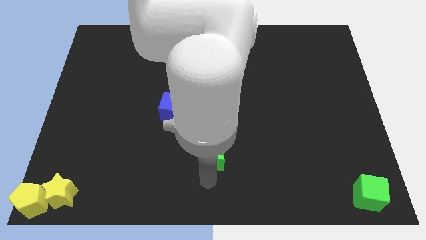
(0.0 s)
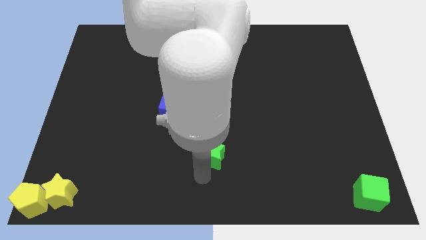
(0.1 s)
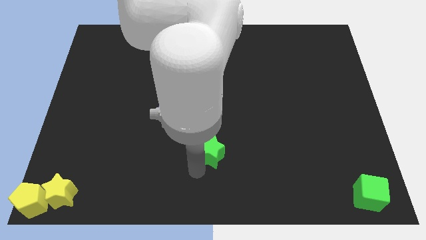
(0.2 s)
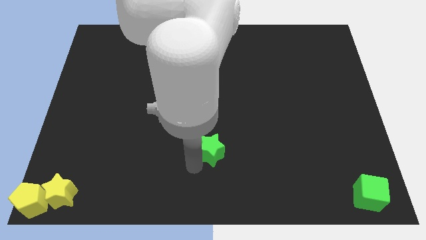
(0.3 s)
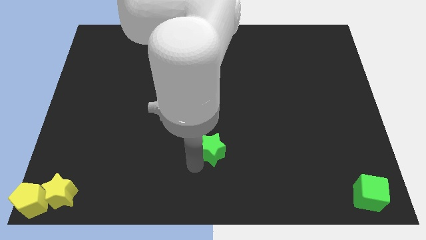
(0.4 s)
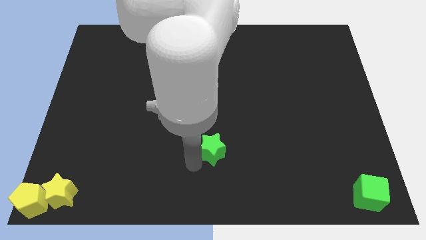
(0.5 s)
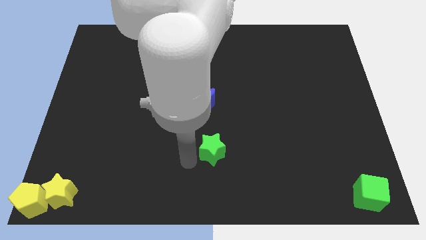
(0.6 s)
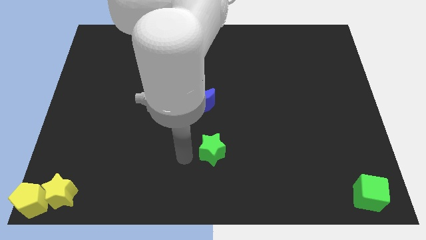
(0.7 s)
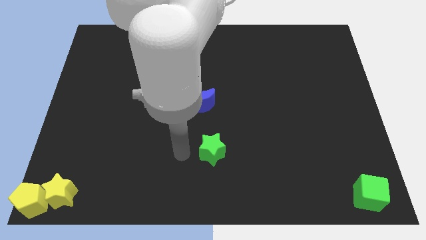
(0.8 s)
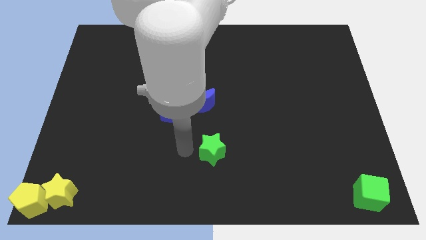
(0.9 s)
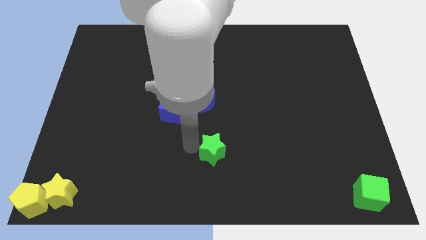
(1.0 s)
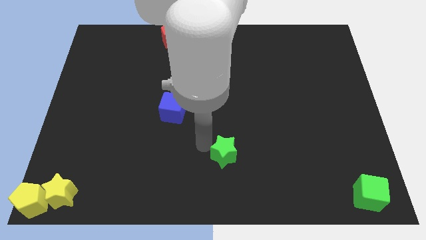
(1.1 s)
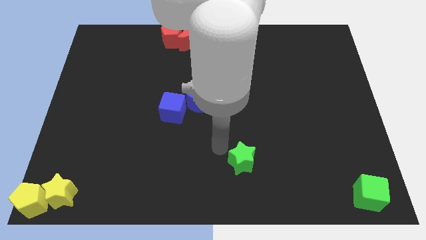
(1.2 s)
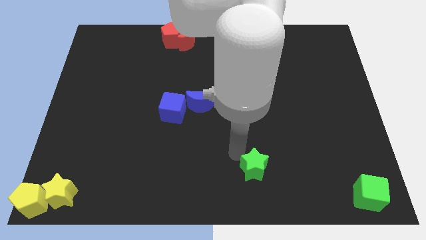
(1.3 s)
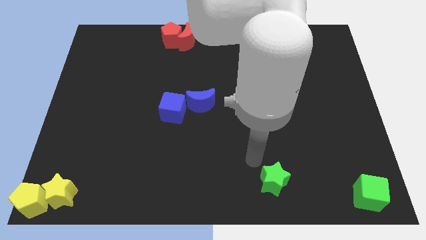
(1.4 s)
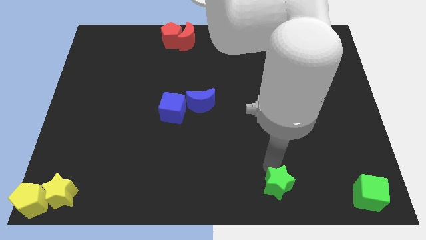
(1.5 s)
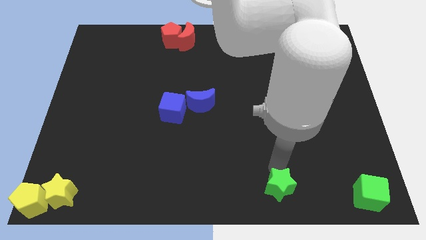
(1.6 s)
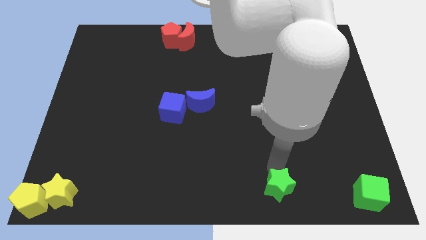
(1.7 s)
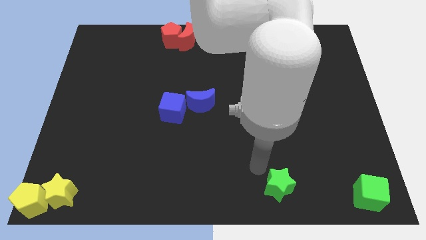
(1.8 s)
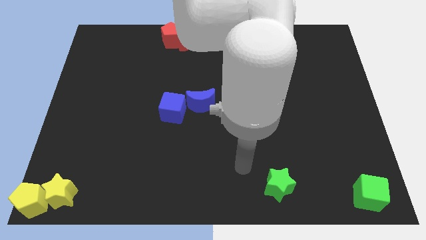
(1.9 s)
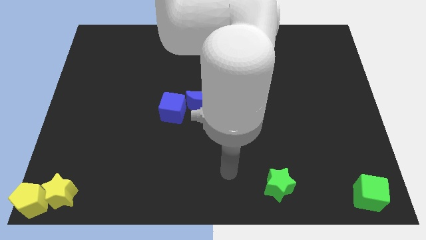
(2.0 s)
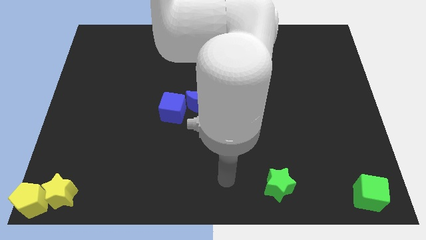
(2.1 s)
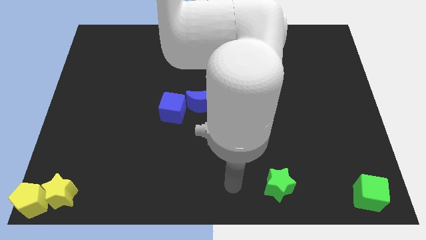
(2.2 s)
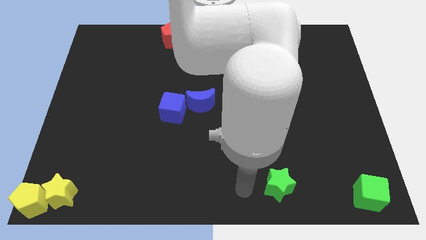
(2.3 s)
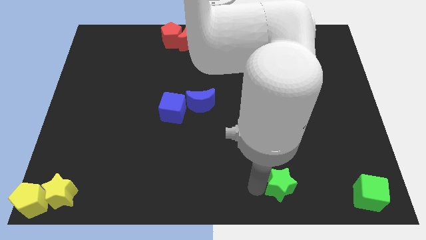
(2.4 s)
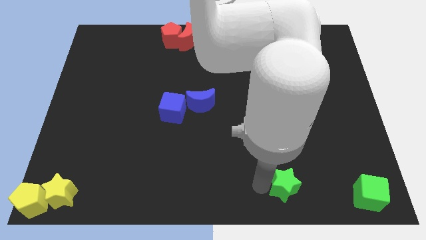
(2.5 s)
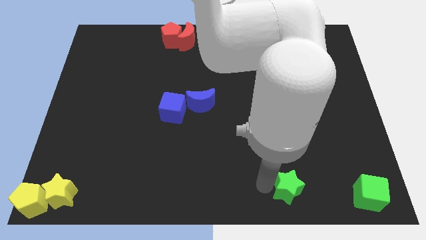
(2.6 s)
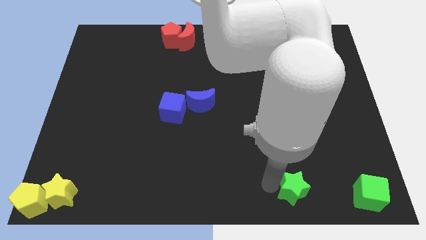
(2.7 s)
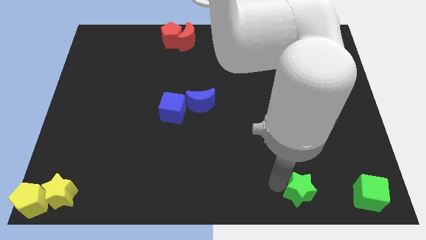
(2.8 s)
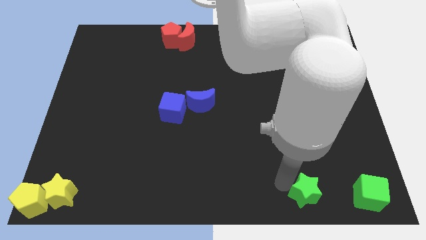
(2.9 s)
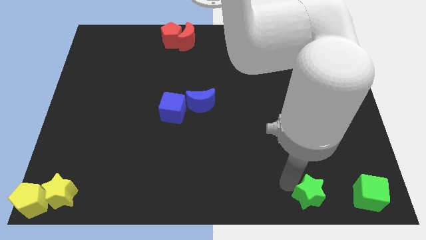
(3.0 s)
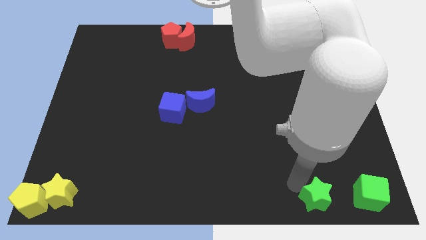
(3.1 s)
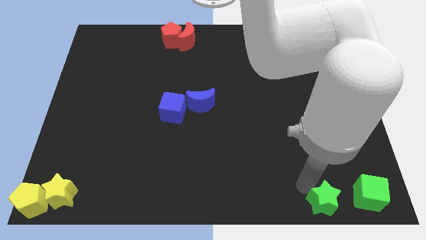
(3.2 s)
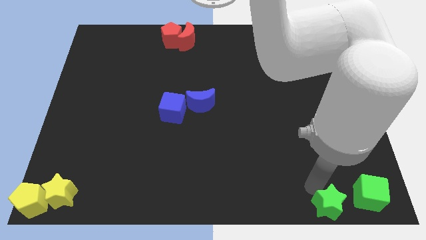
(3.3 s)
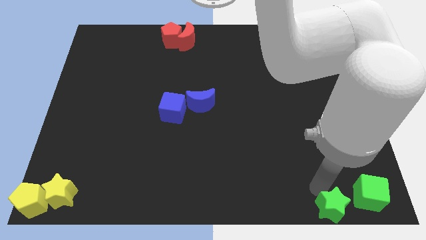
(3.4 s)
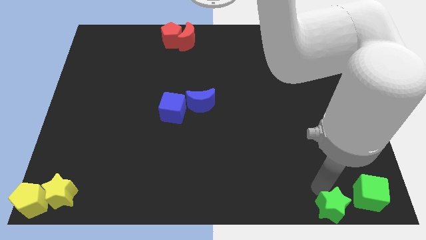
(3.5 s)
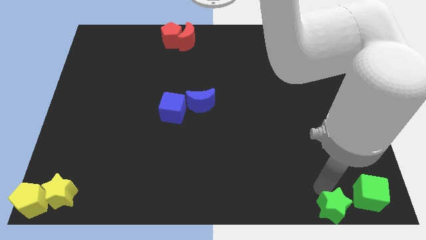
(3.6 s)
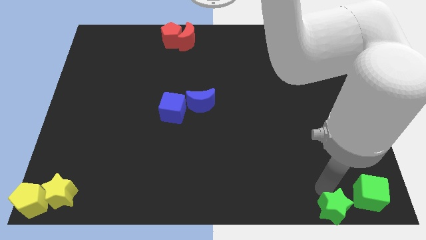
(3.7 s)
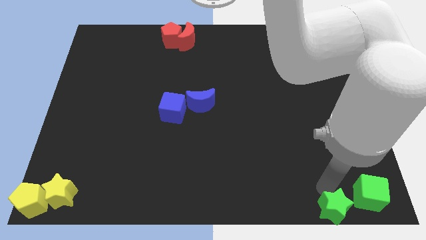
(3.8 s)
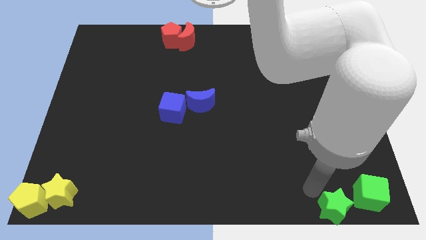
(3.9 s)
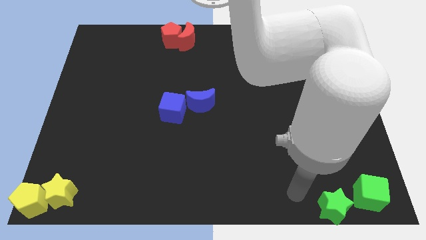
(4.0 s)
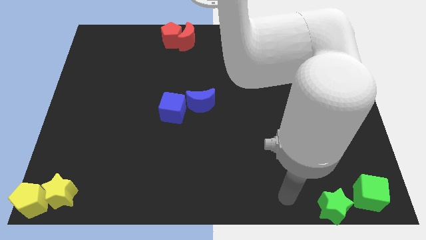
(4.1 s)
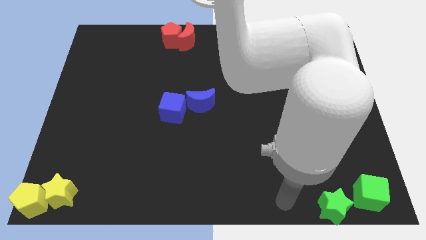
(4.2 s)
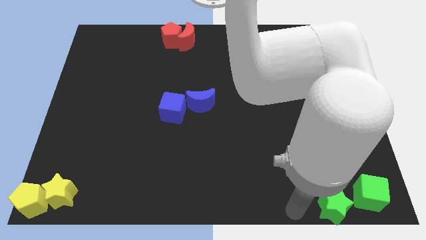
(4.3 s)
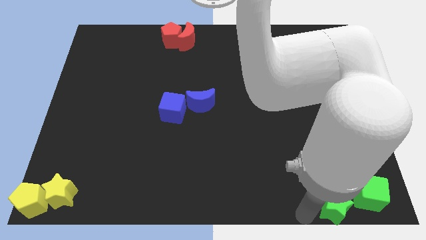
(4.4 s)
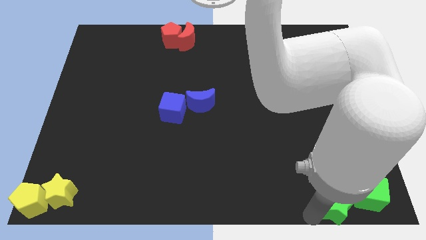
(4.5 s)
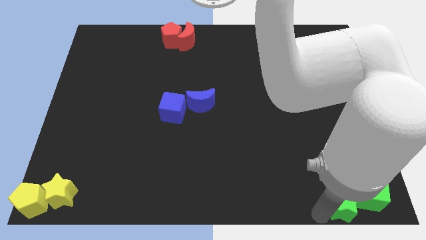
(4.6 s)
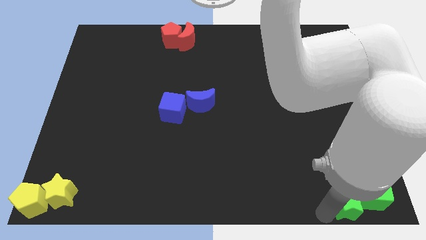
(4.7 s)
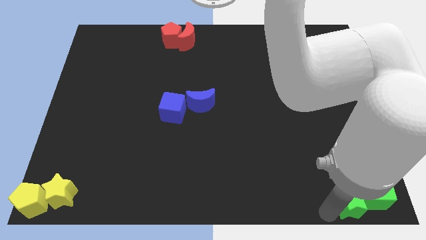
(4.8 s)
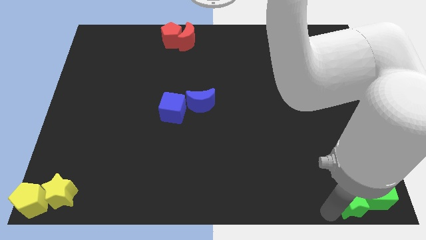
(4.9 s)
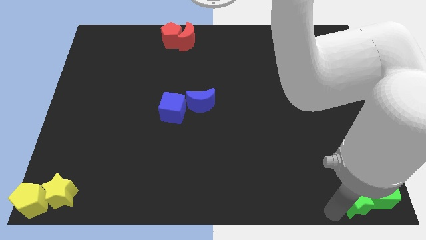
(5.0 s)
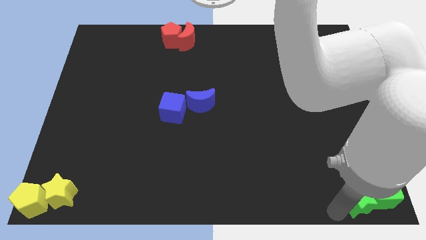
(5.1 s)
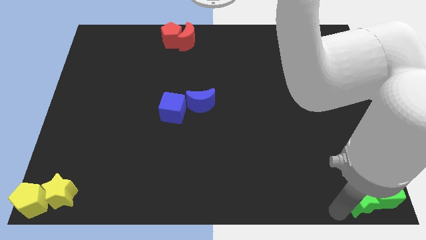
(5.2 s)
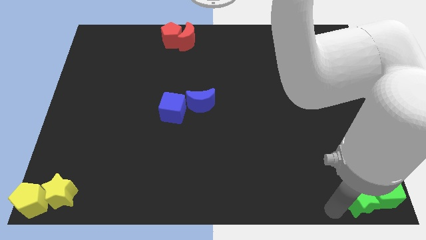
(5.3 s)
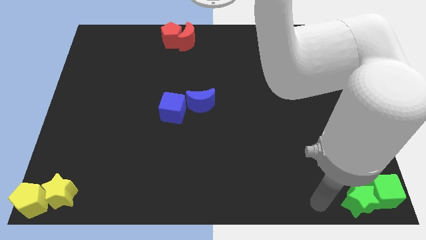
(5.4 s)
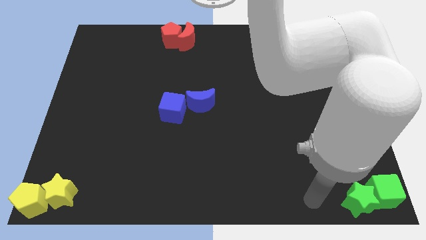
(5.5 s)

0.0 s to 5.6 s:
push the green star to the left of the green cube

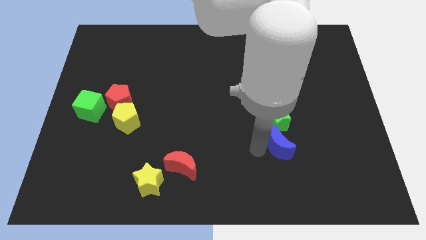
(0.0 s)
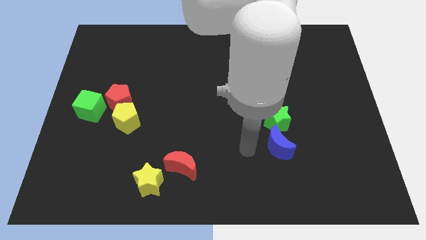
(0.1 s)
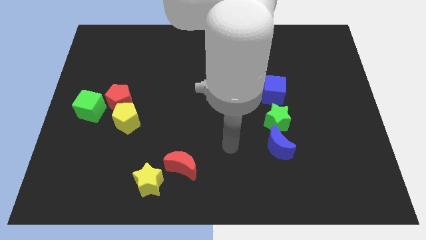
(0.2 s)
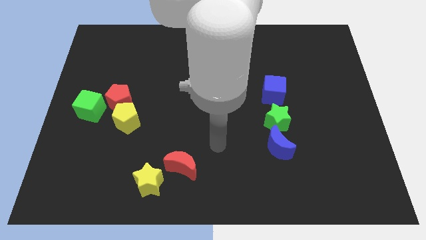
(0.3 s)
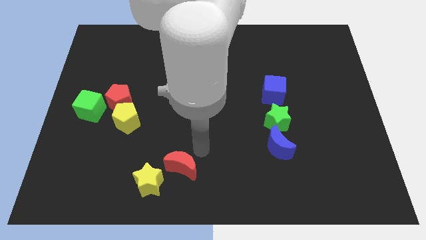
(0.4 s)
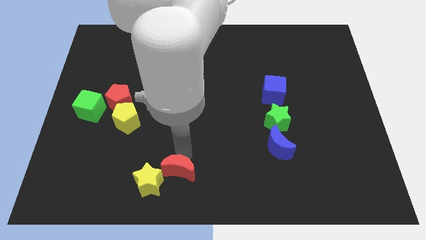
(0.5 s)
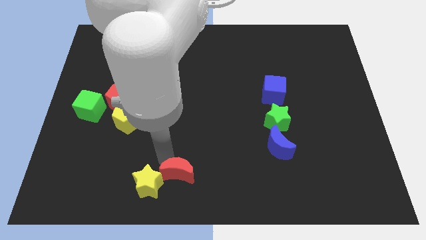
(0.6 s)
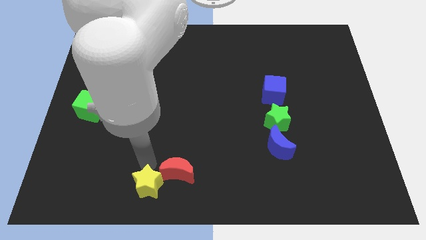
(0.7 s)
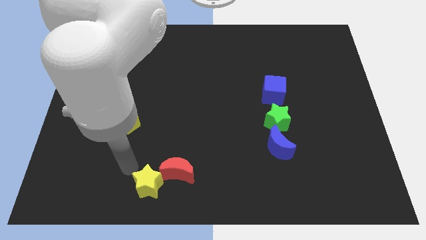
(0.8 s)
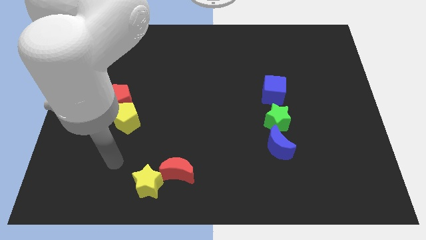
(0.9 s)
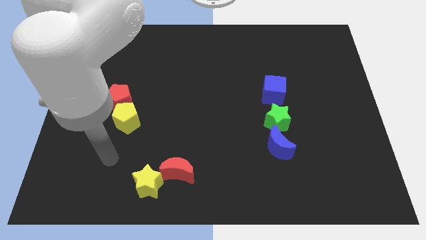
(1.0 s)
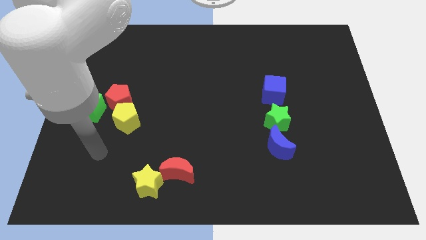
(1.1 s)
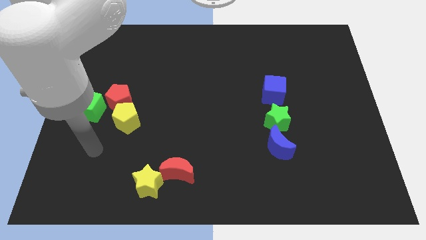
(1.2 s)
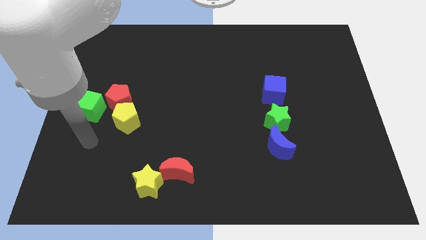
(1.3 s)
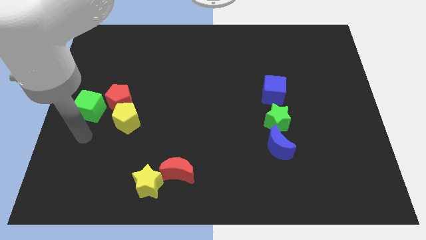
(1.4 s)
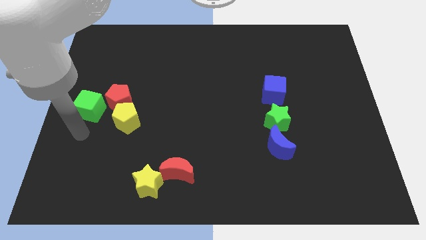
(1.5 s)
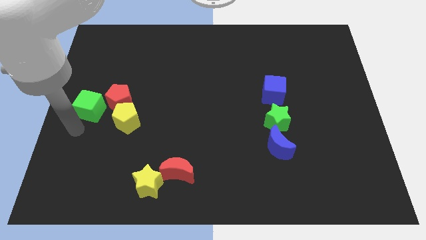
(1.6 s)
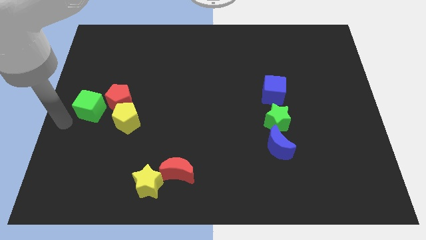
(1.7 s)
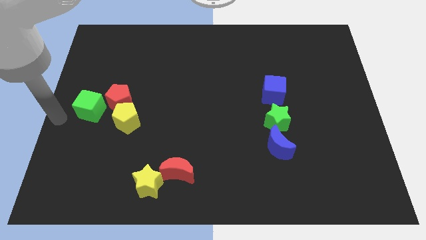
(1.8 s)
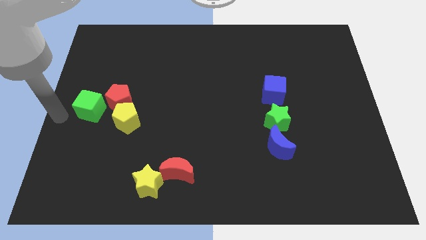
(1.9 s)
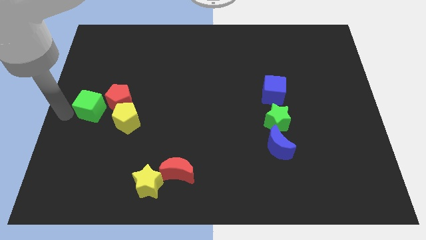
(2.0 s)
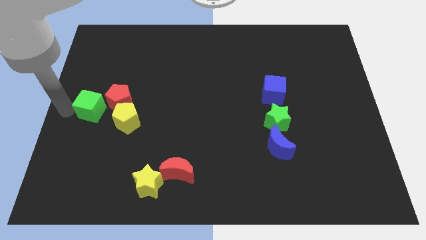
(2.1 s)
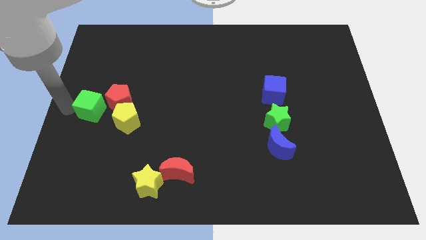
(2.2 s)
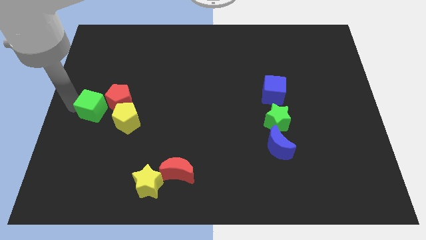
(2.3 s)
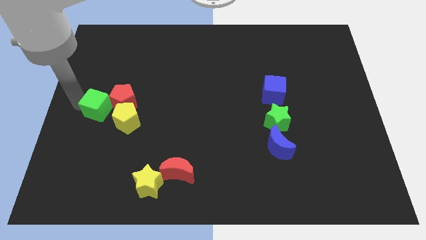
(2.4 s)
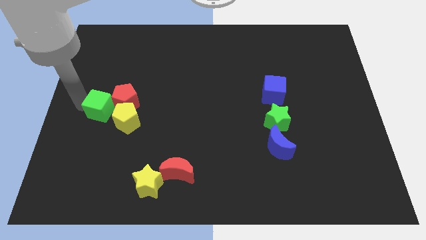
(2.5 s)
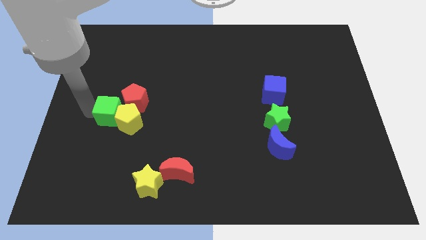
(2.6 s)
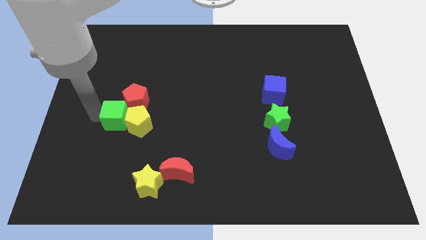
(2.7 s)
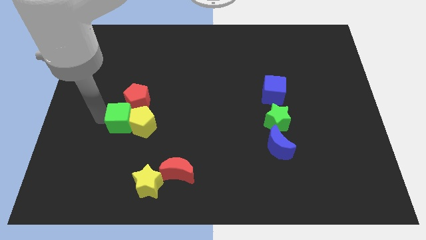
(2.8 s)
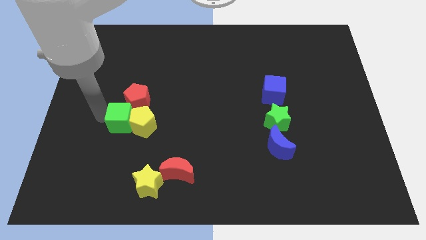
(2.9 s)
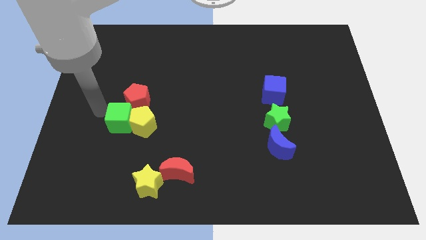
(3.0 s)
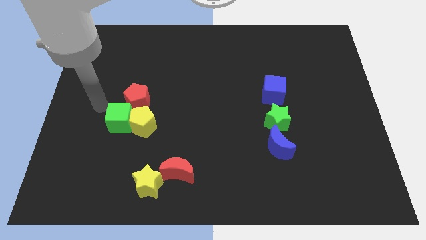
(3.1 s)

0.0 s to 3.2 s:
push the group of blocks towards bottom center

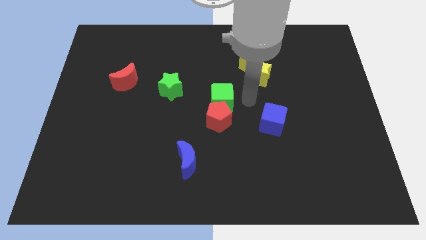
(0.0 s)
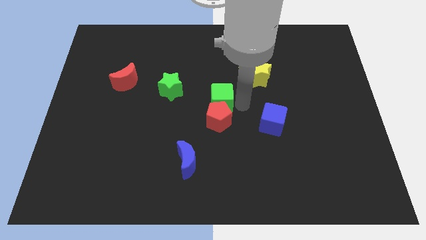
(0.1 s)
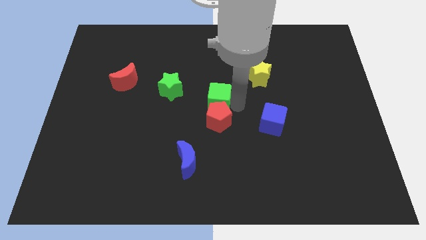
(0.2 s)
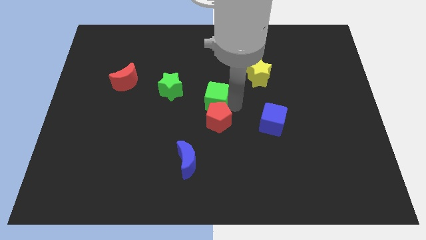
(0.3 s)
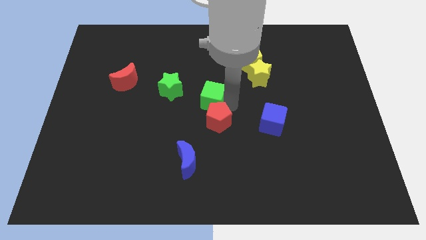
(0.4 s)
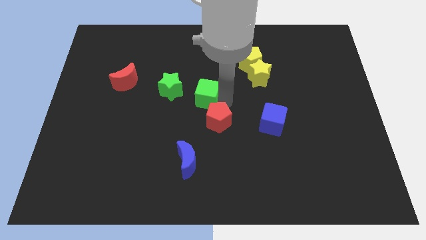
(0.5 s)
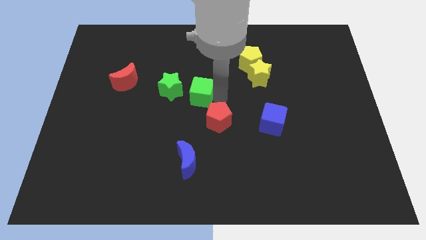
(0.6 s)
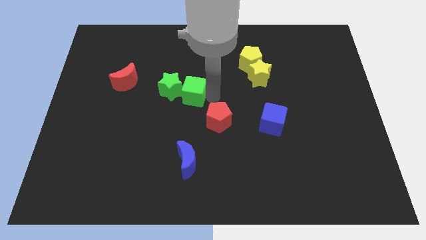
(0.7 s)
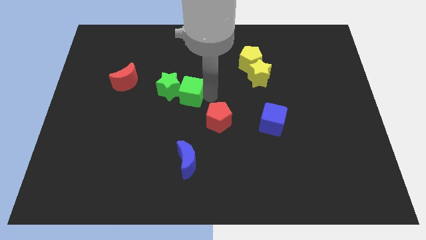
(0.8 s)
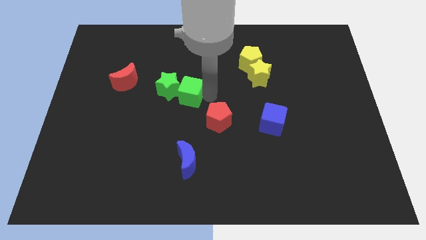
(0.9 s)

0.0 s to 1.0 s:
move the green cube into the green star
